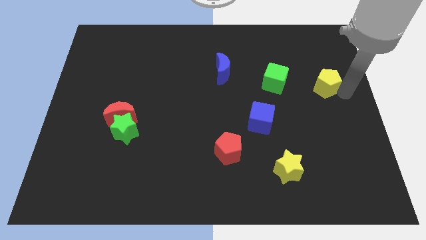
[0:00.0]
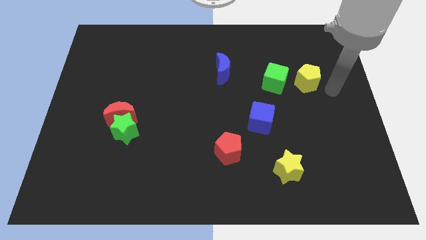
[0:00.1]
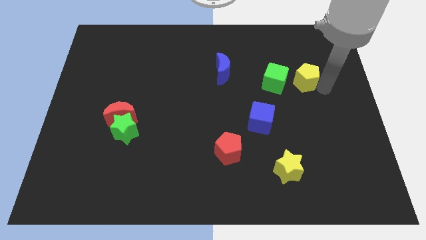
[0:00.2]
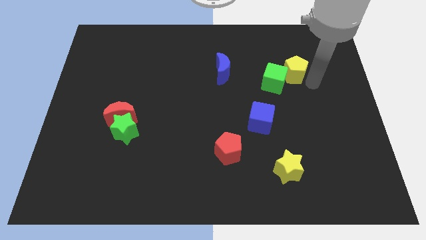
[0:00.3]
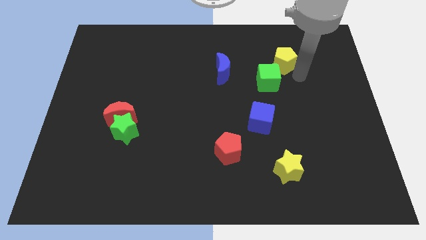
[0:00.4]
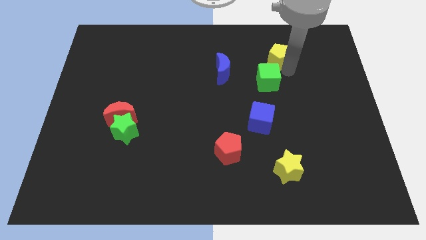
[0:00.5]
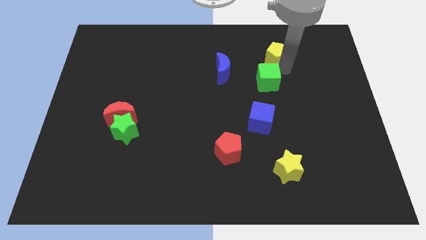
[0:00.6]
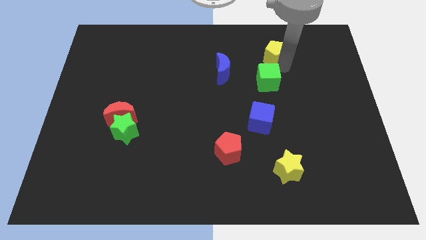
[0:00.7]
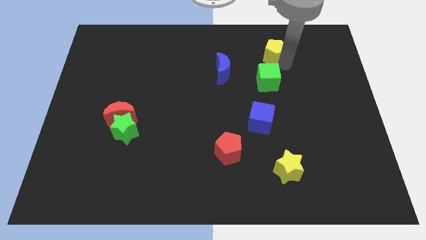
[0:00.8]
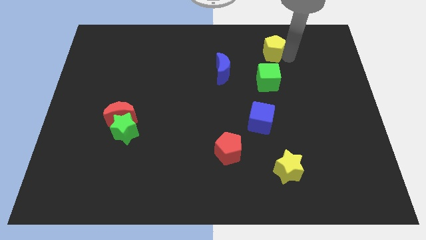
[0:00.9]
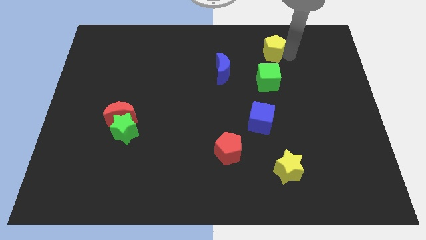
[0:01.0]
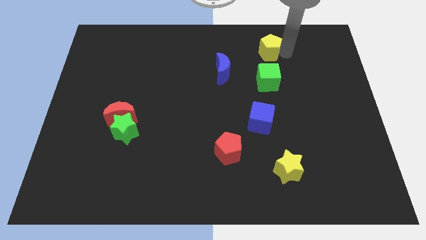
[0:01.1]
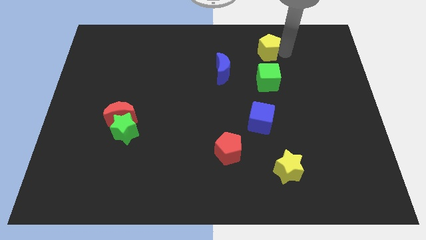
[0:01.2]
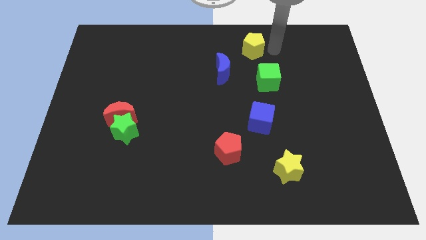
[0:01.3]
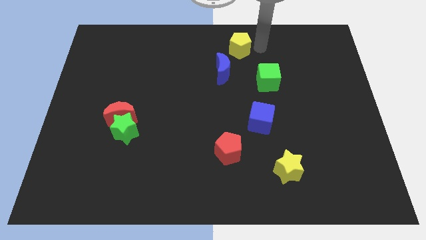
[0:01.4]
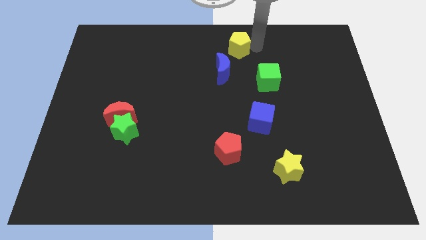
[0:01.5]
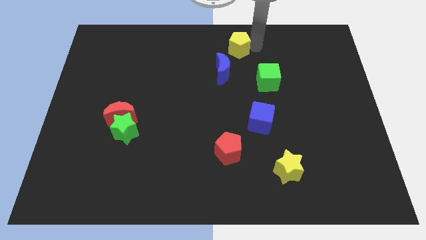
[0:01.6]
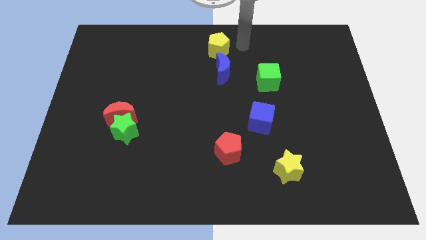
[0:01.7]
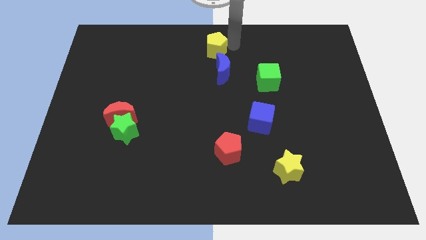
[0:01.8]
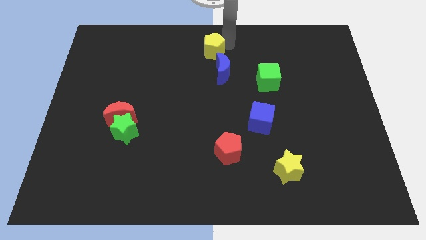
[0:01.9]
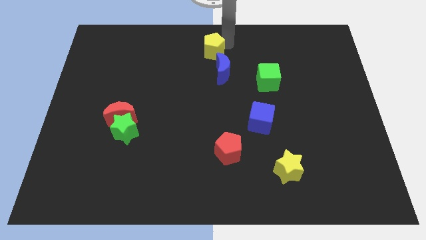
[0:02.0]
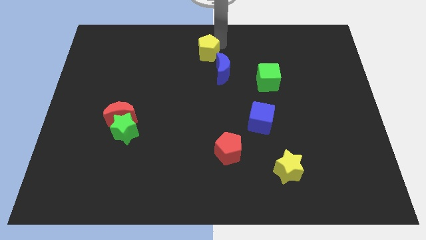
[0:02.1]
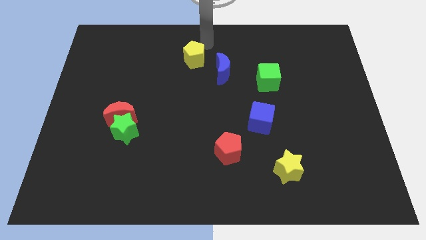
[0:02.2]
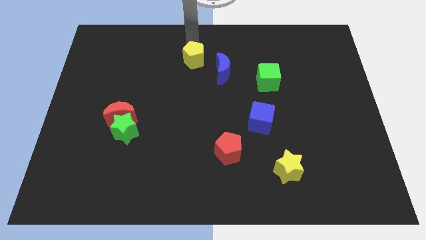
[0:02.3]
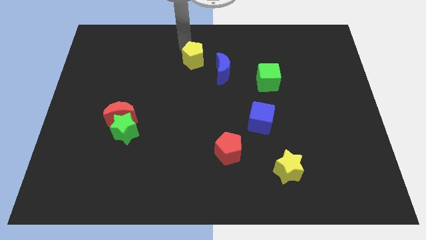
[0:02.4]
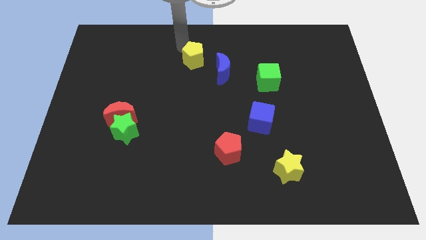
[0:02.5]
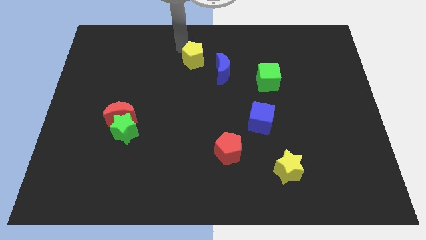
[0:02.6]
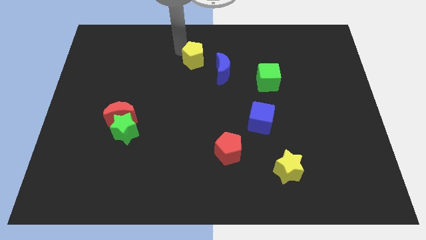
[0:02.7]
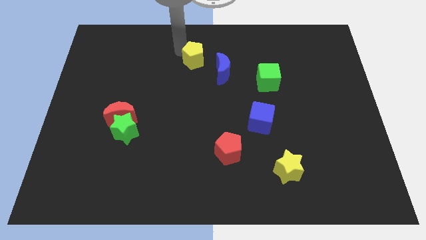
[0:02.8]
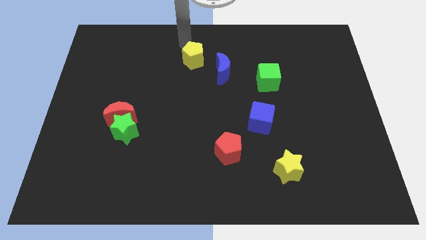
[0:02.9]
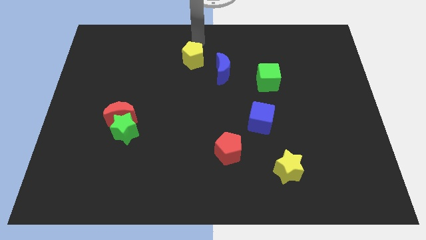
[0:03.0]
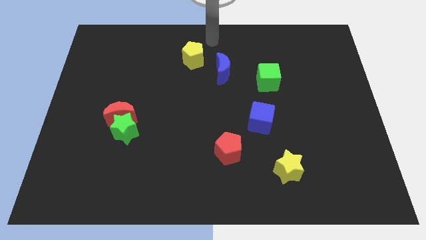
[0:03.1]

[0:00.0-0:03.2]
push the yellow pentagon towards the top center of the board

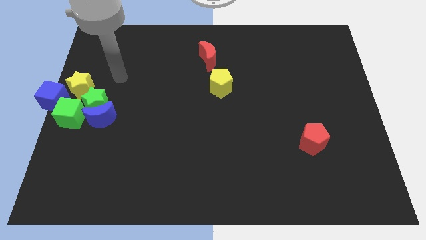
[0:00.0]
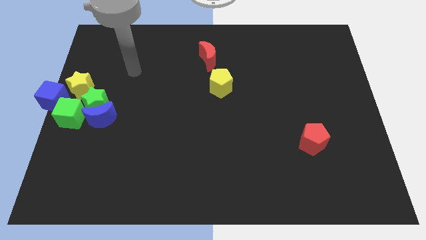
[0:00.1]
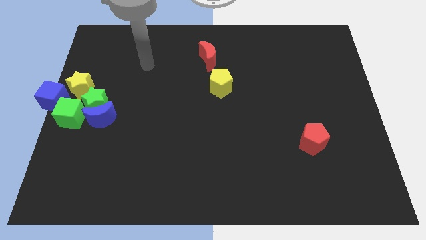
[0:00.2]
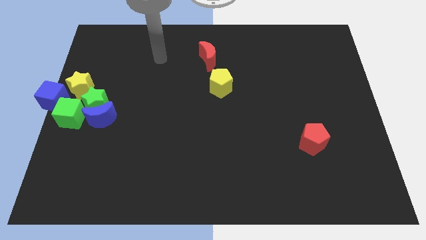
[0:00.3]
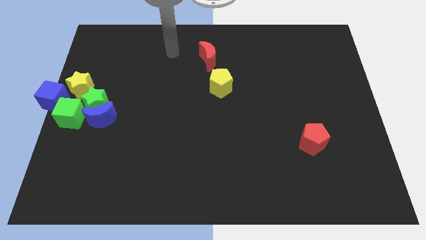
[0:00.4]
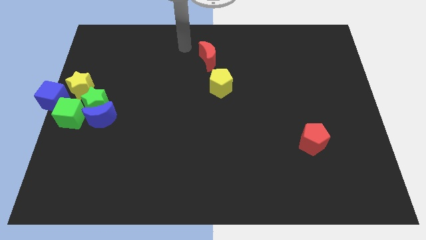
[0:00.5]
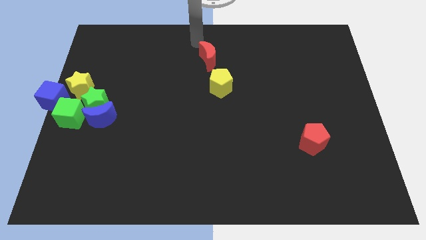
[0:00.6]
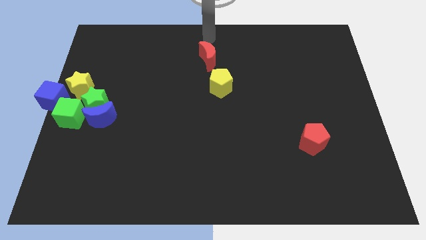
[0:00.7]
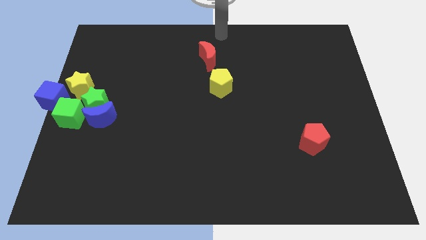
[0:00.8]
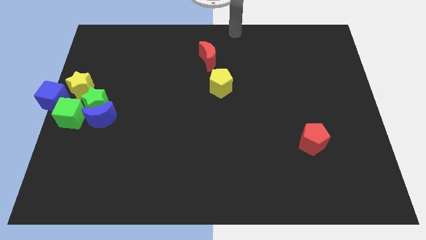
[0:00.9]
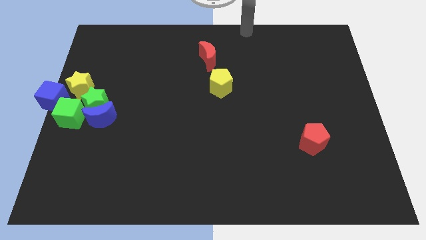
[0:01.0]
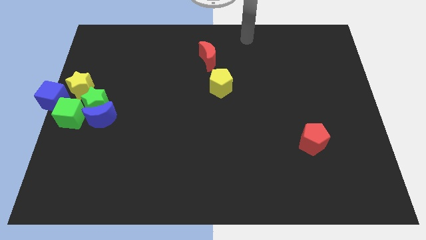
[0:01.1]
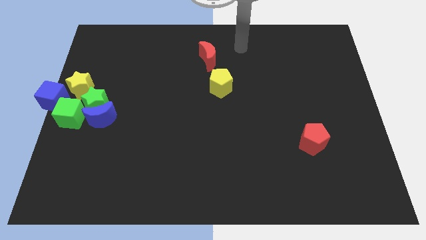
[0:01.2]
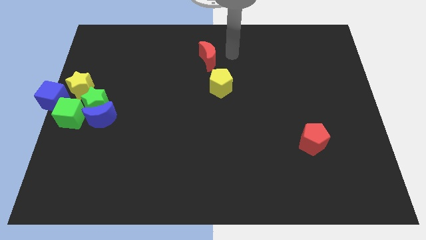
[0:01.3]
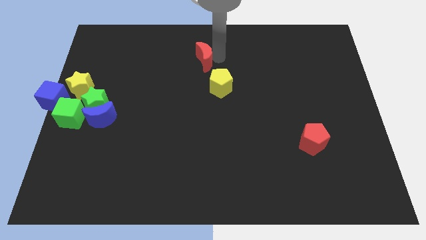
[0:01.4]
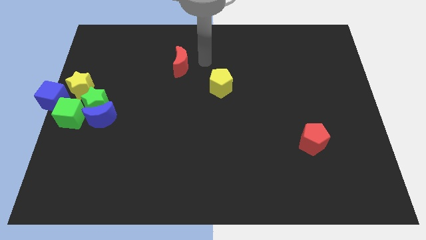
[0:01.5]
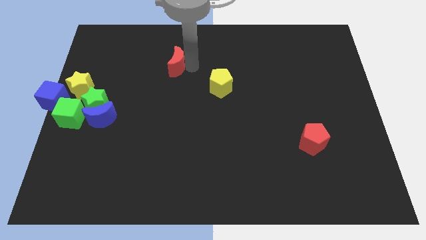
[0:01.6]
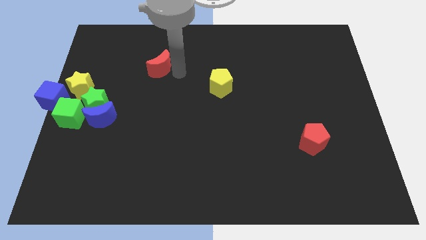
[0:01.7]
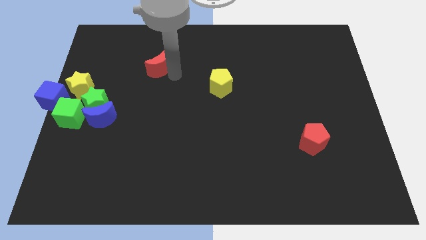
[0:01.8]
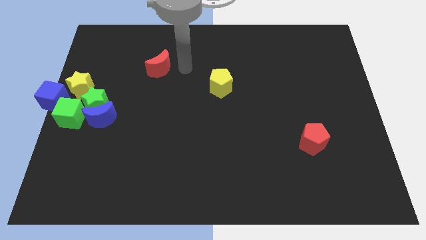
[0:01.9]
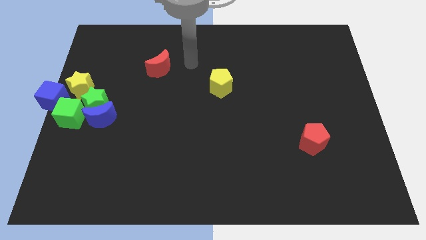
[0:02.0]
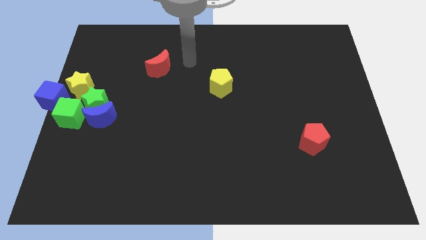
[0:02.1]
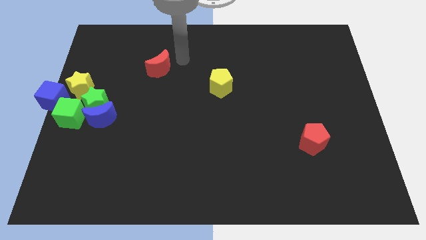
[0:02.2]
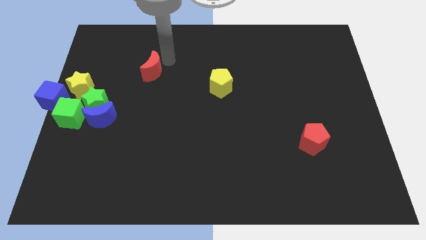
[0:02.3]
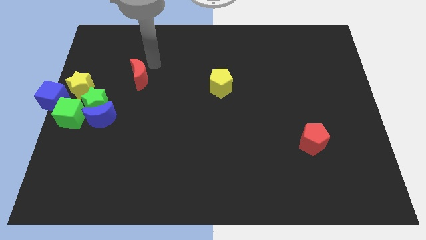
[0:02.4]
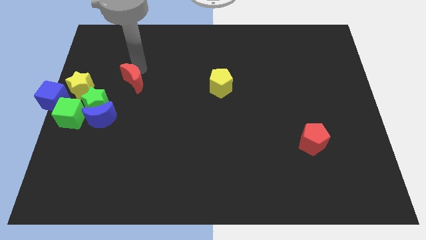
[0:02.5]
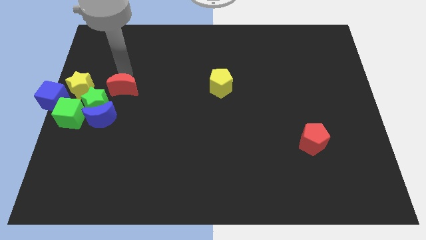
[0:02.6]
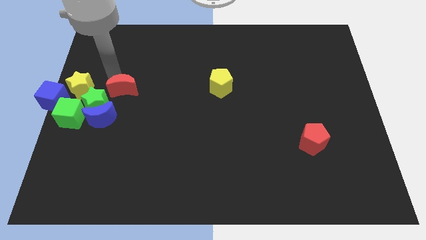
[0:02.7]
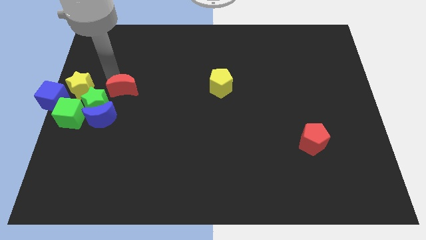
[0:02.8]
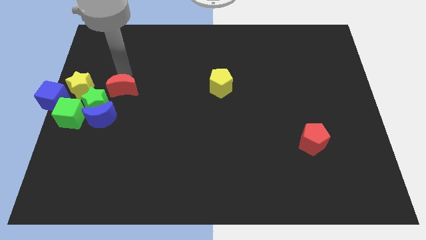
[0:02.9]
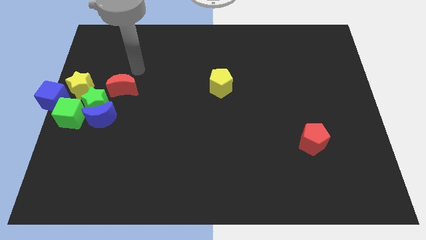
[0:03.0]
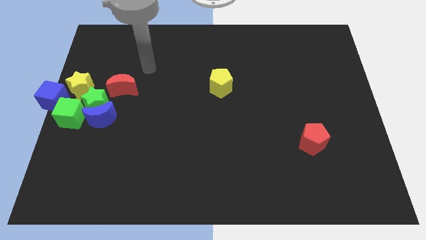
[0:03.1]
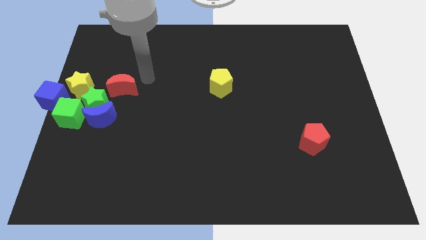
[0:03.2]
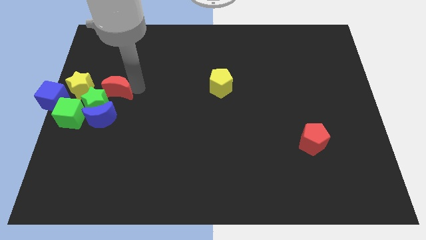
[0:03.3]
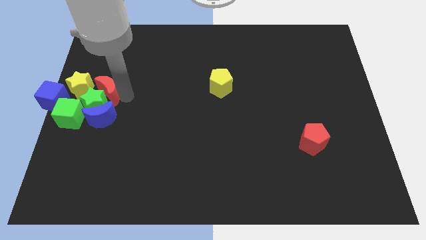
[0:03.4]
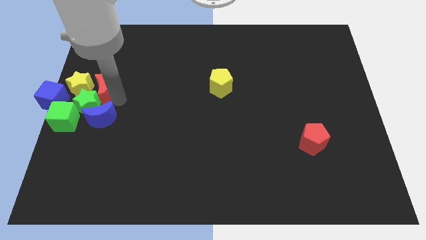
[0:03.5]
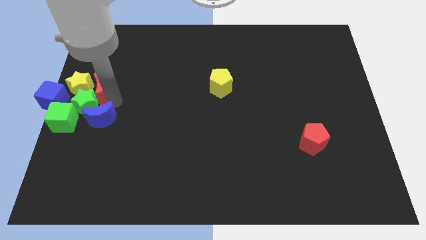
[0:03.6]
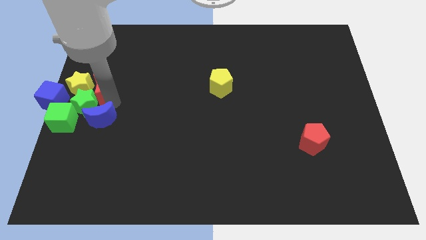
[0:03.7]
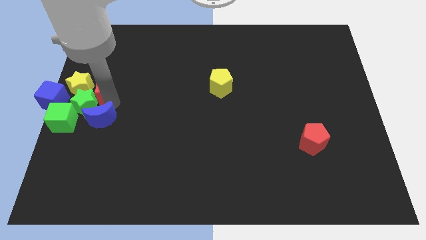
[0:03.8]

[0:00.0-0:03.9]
slide the red moon into the right side of the green star

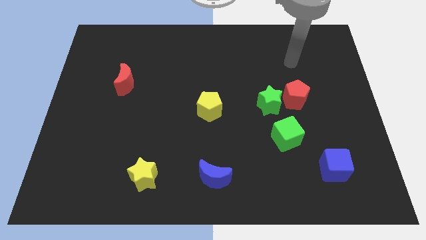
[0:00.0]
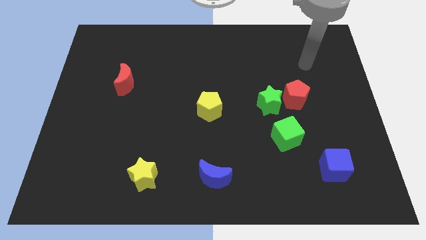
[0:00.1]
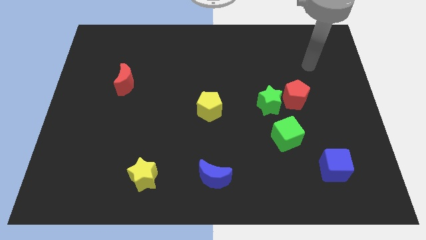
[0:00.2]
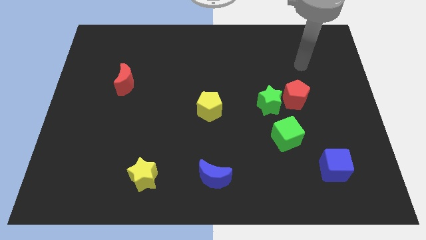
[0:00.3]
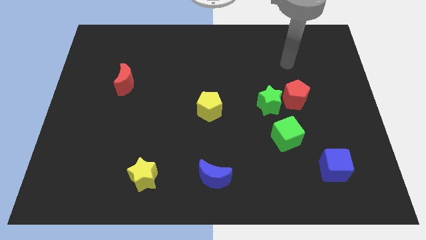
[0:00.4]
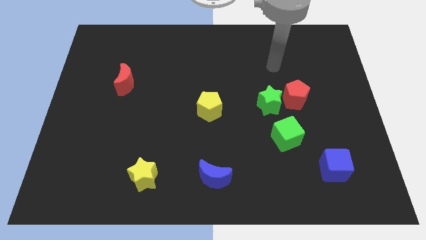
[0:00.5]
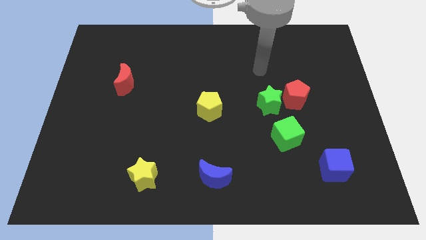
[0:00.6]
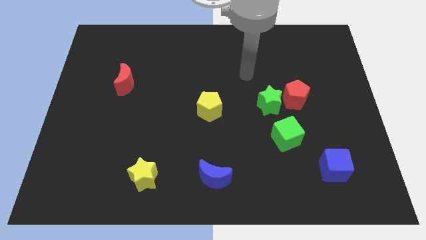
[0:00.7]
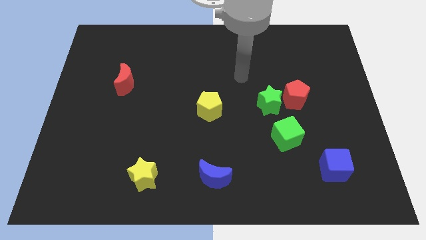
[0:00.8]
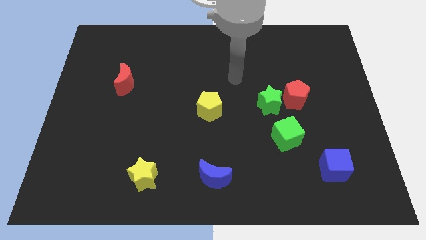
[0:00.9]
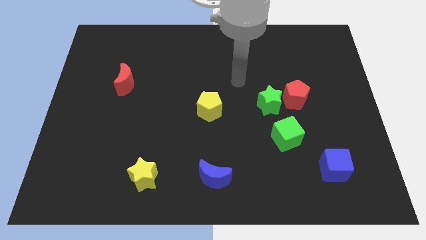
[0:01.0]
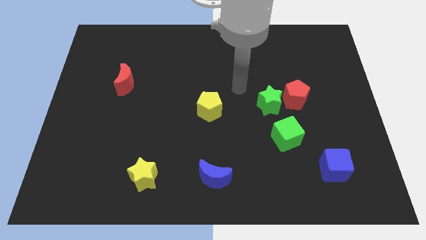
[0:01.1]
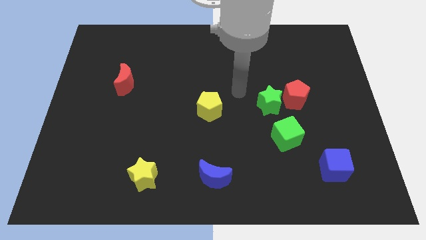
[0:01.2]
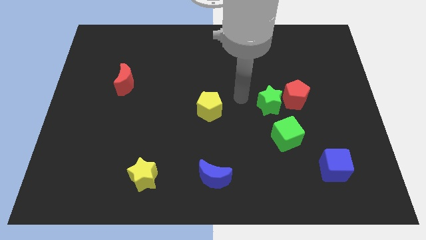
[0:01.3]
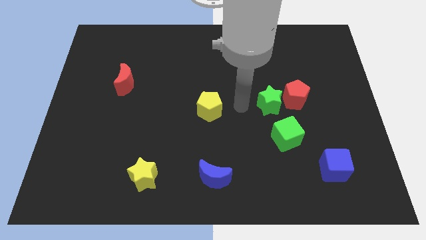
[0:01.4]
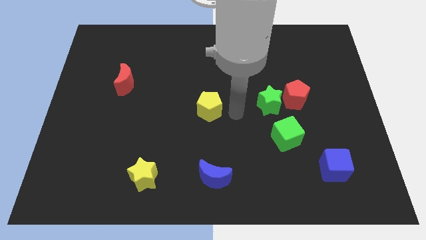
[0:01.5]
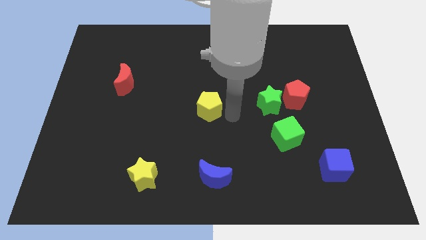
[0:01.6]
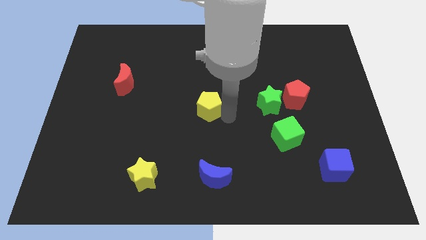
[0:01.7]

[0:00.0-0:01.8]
place the arm right to the yellow pentagon

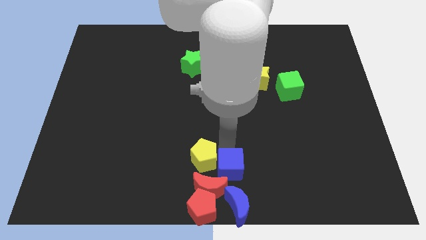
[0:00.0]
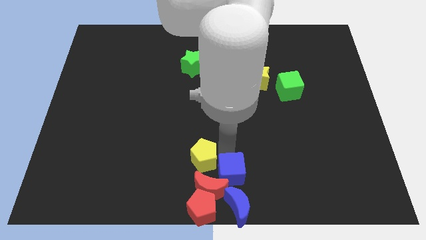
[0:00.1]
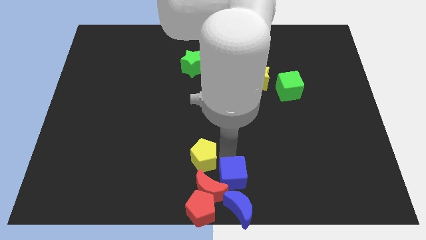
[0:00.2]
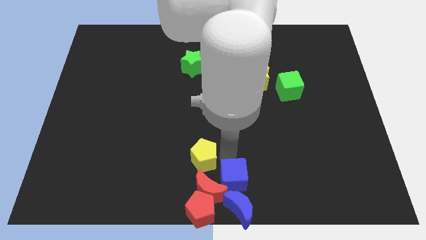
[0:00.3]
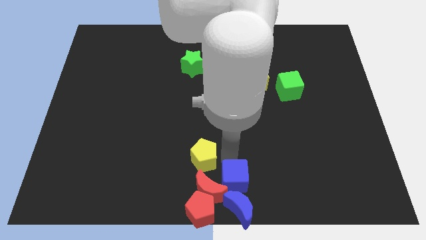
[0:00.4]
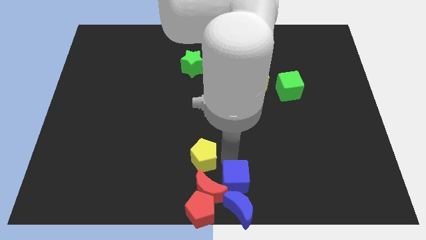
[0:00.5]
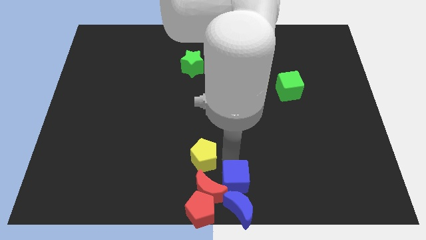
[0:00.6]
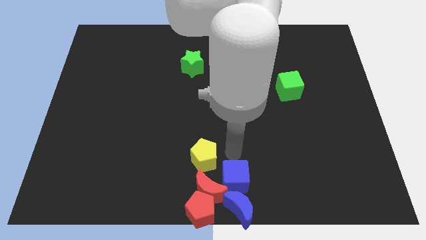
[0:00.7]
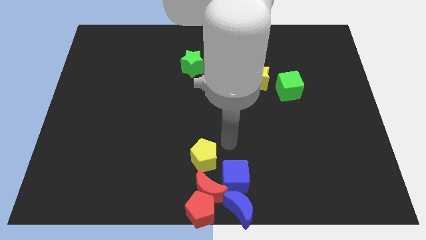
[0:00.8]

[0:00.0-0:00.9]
push blue cube slightly down towards the blue crescent
